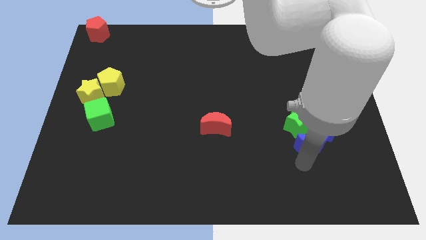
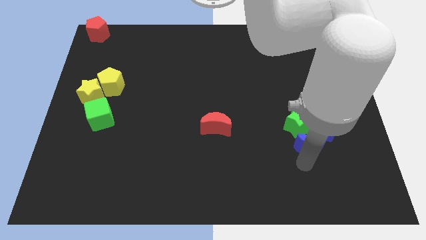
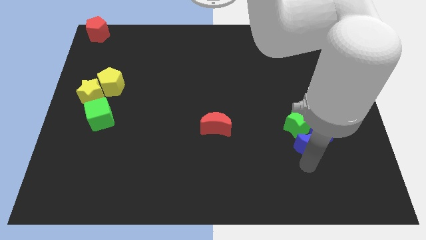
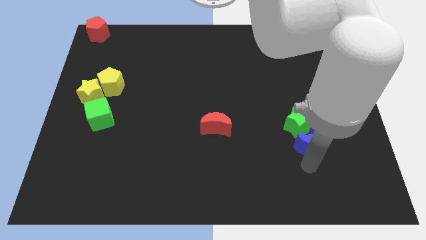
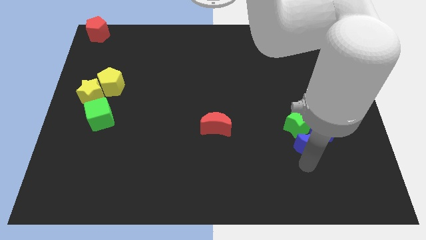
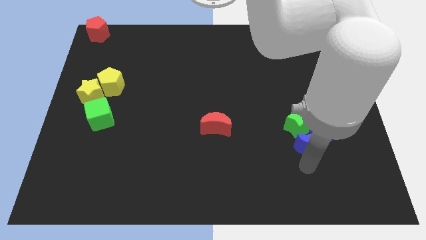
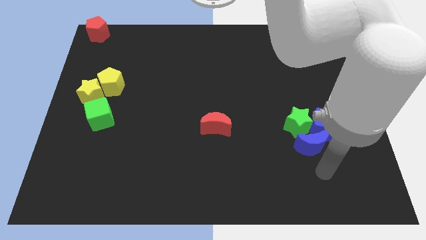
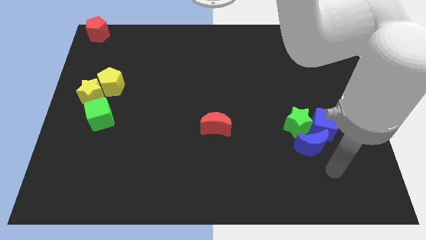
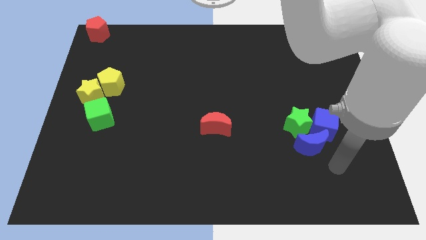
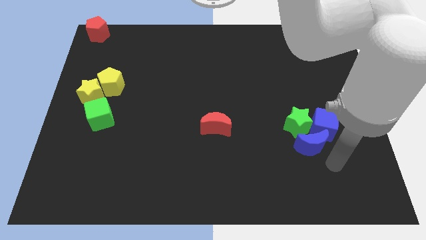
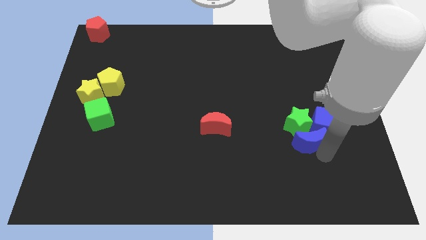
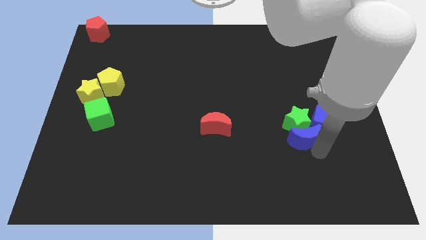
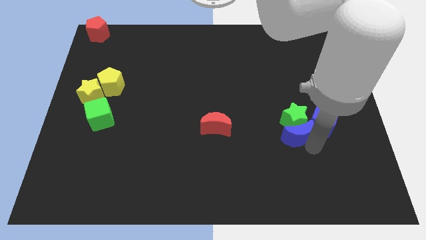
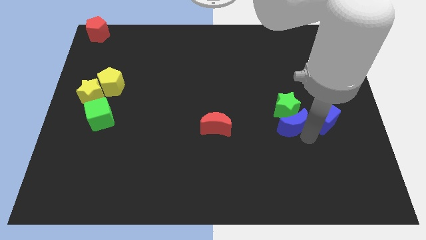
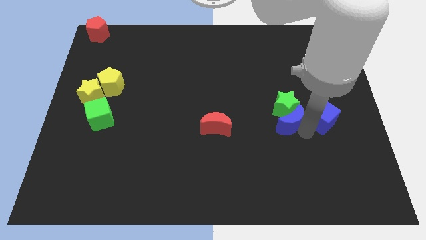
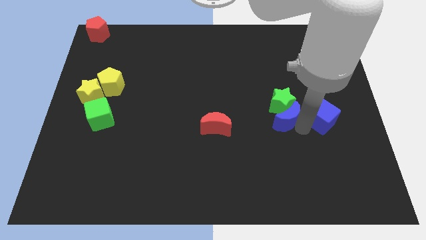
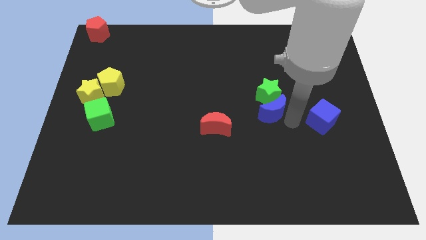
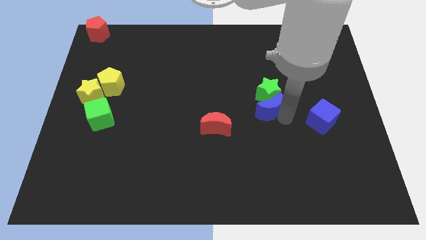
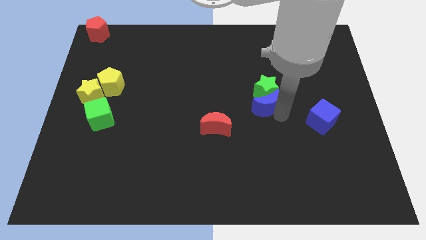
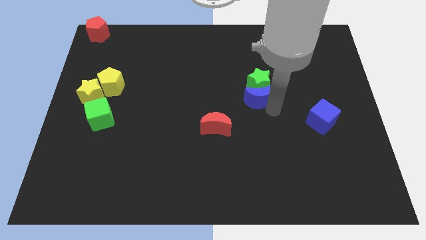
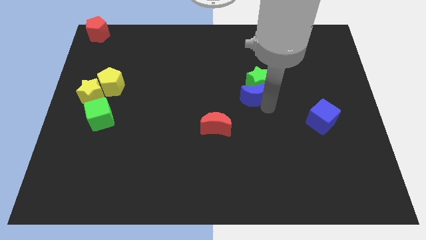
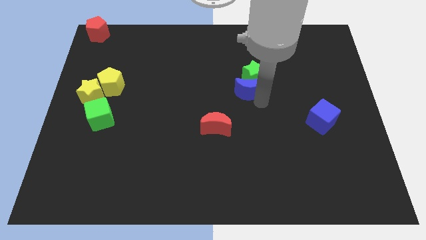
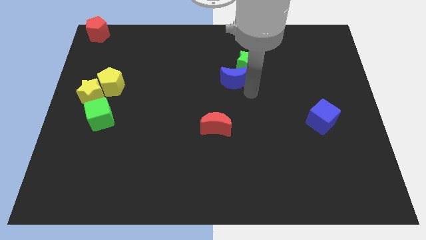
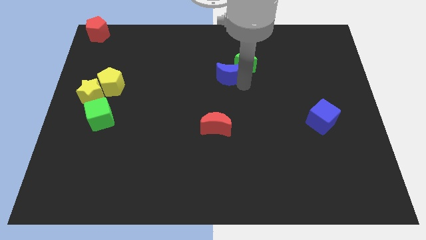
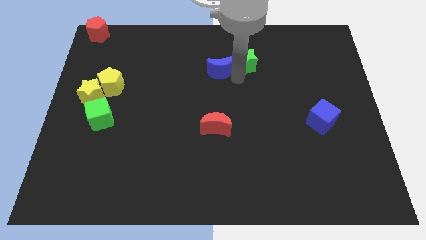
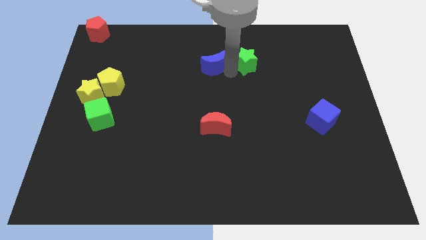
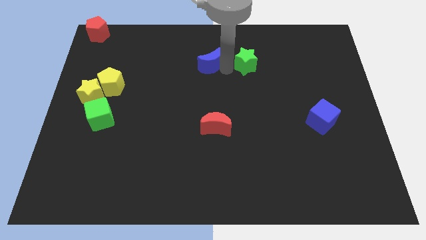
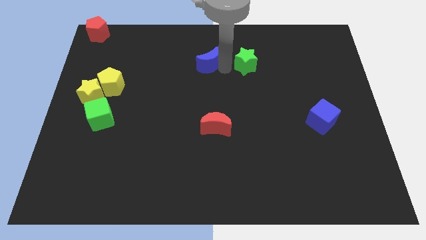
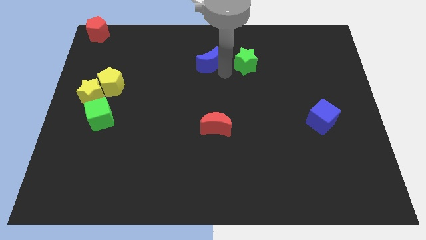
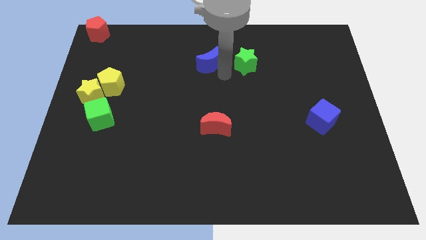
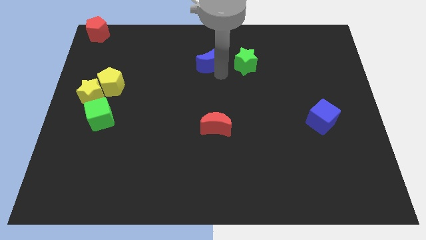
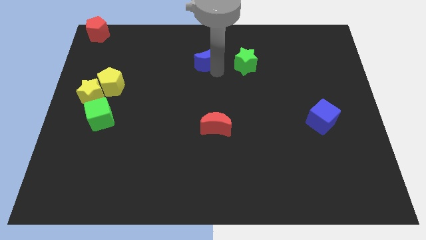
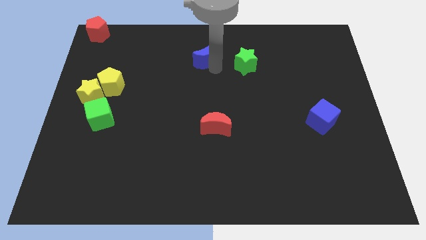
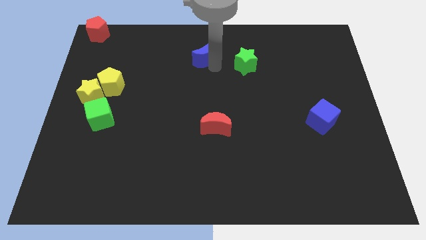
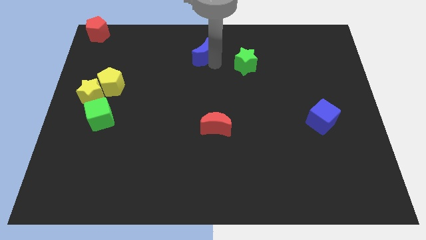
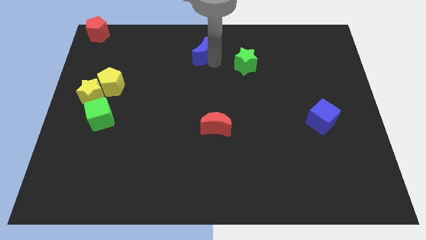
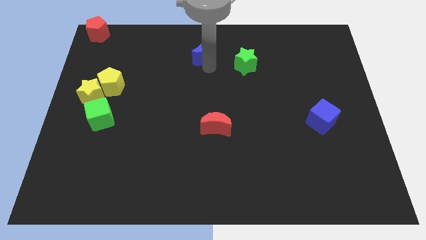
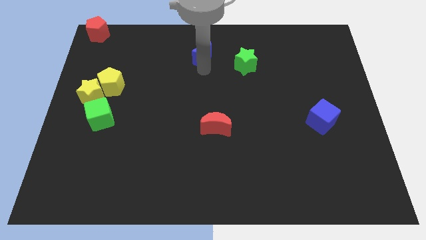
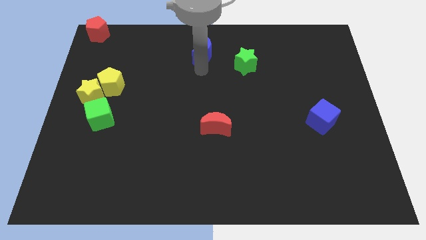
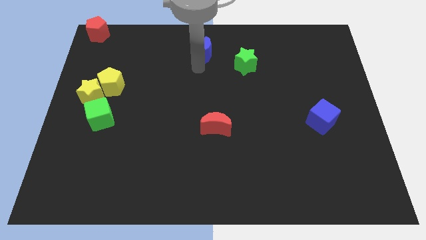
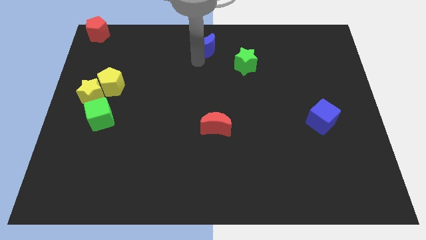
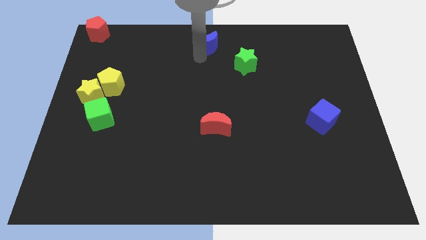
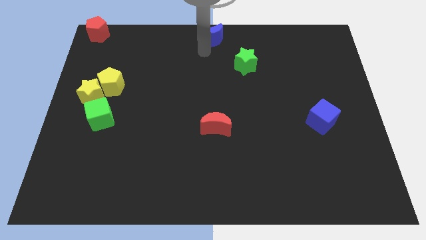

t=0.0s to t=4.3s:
separate the blue crescent from the green star

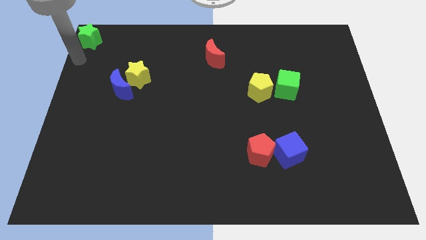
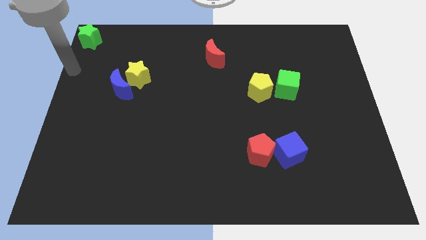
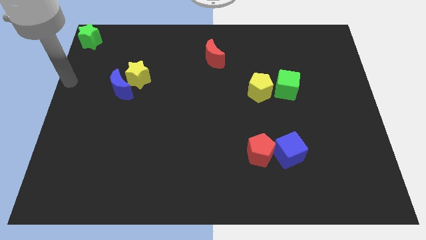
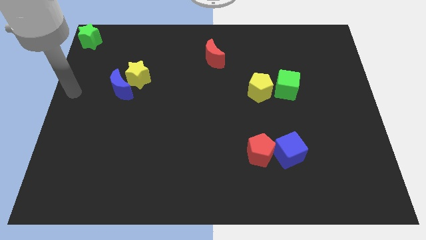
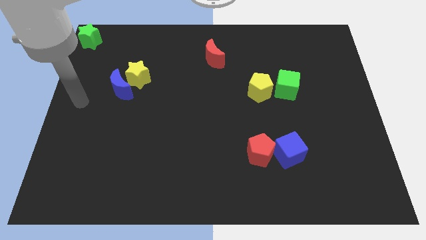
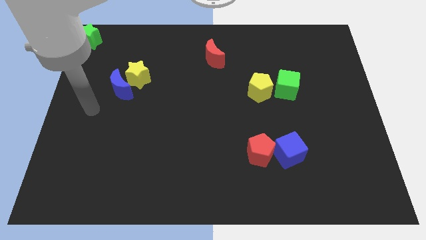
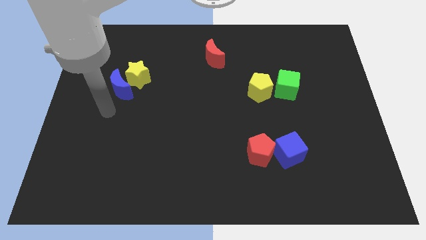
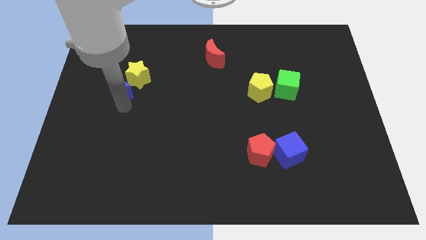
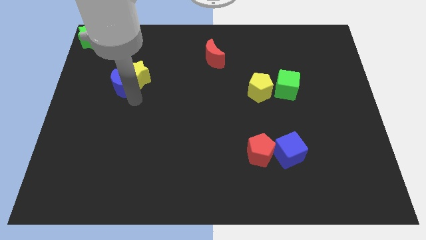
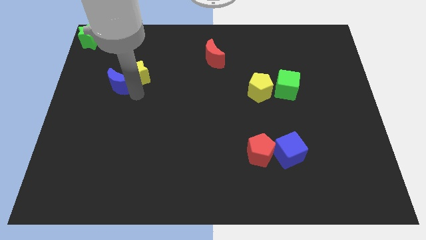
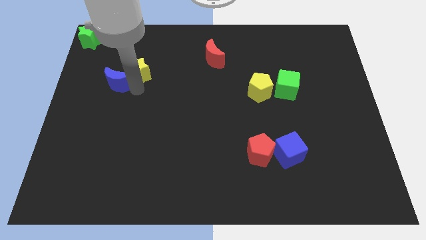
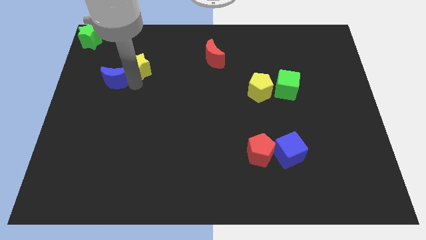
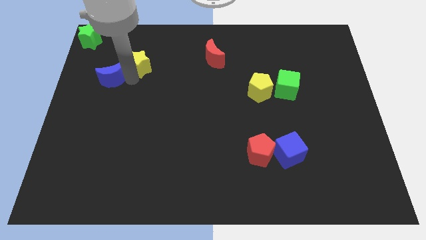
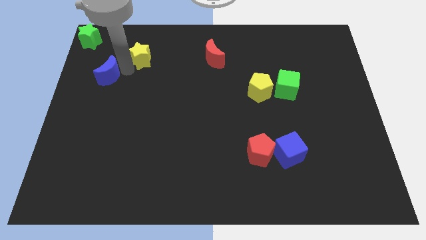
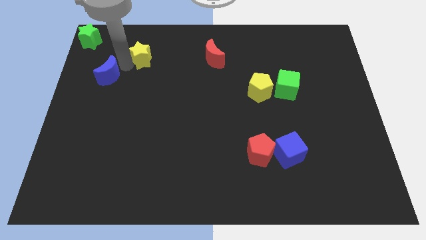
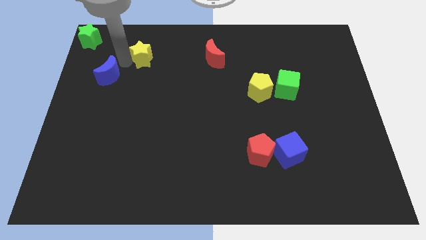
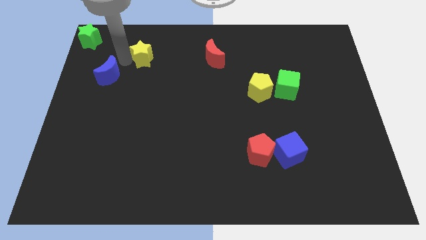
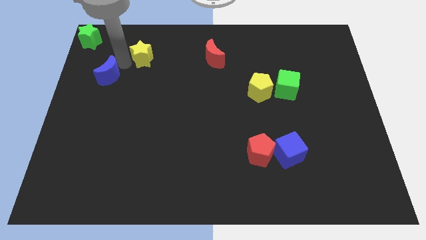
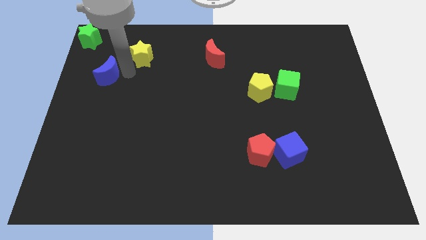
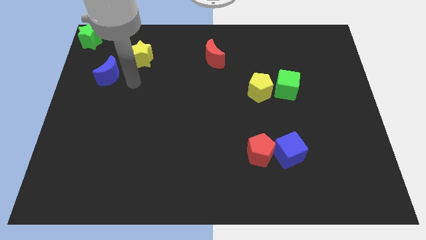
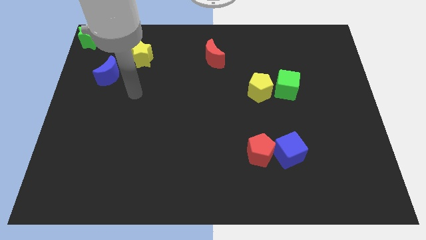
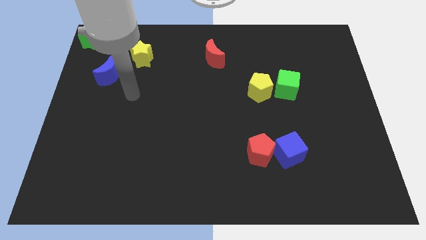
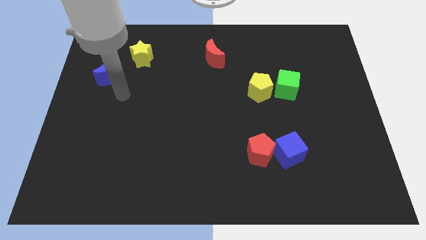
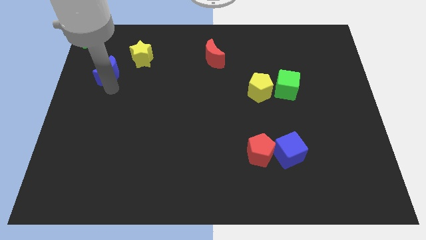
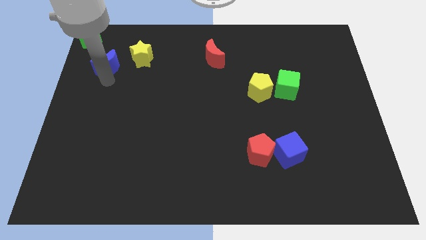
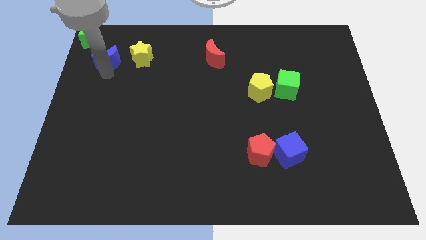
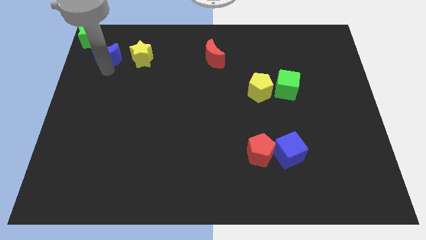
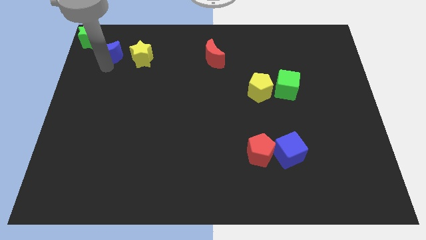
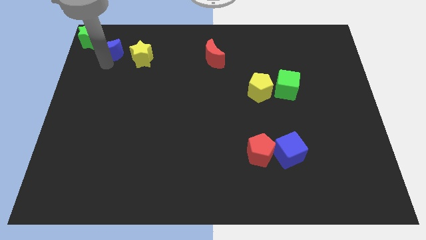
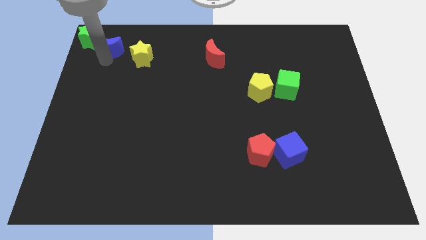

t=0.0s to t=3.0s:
separate blue moon and yellow star

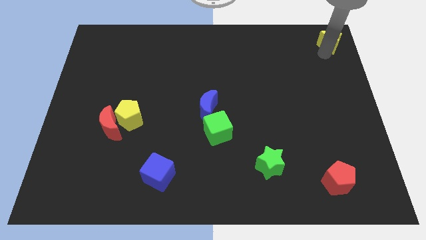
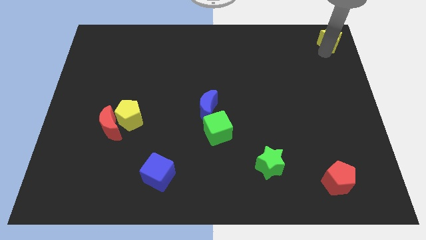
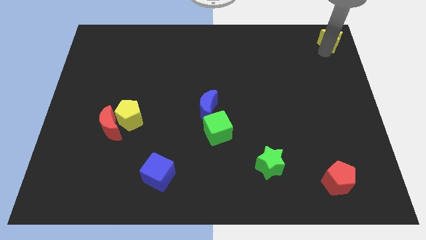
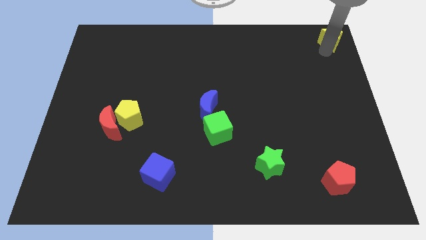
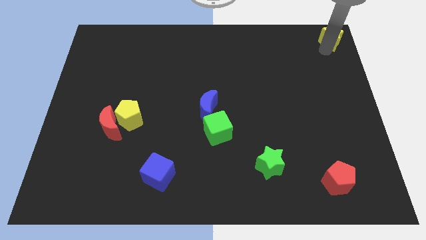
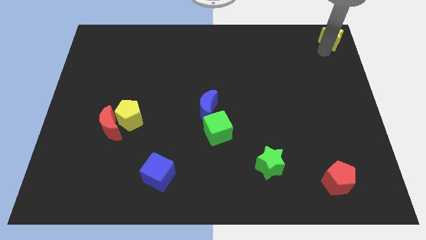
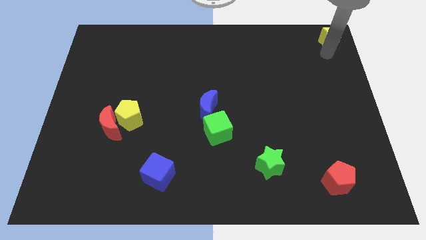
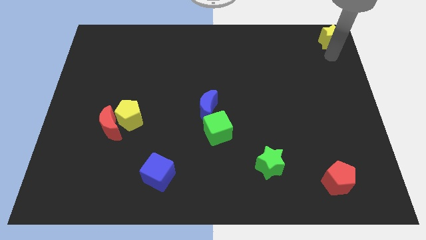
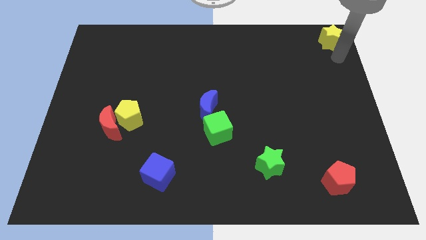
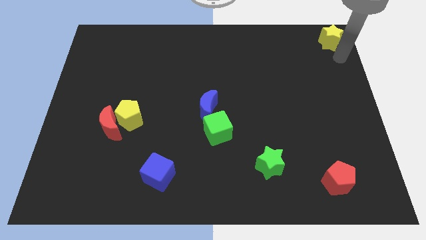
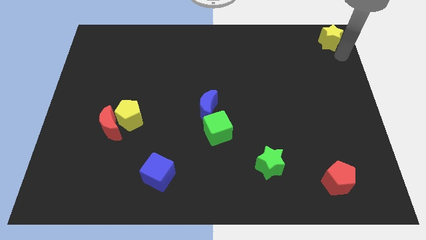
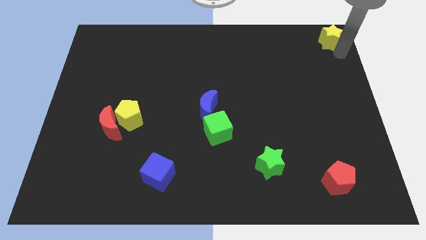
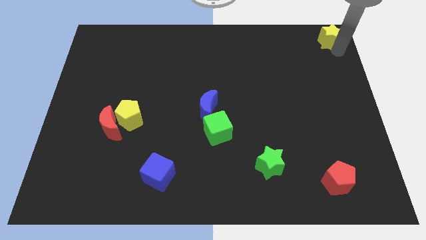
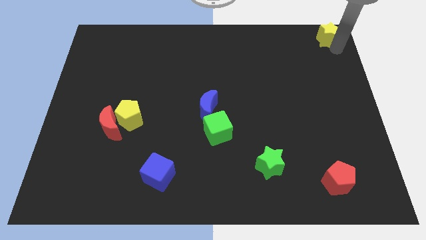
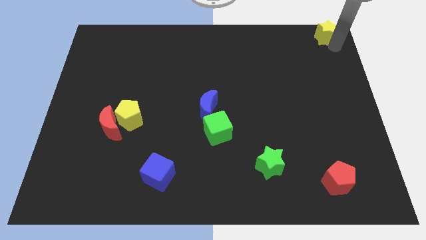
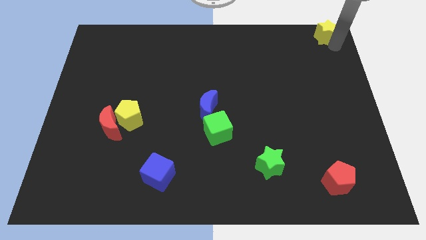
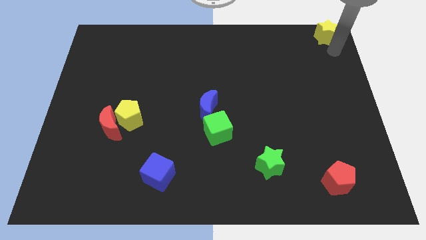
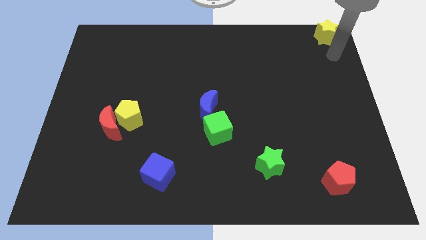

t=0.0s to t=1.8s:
move the yellow star to the top right of the board
